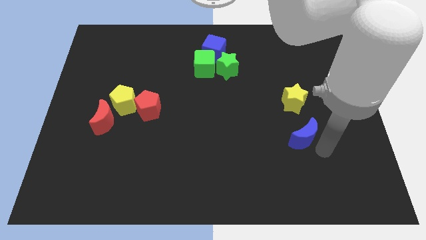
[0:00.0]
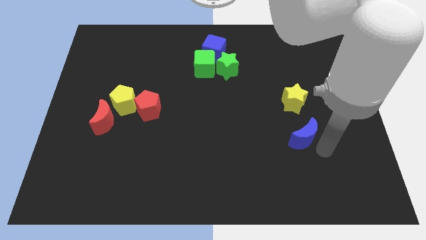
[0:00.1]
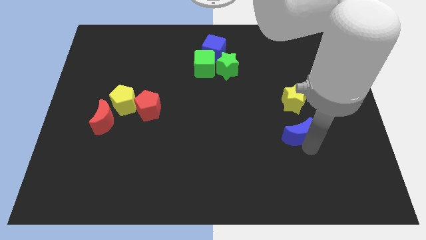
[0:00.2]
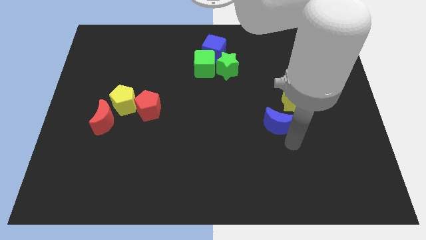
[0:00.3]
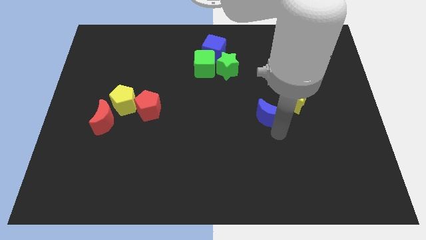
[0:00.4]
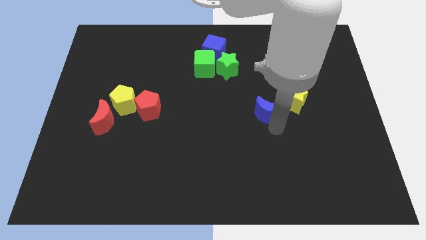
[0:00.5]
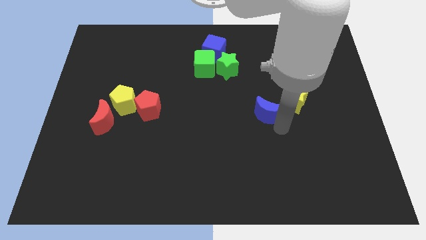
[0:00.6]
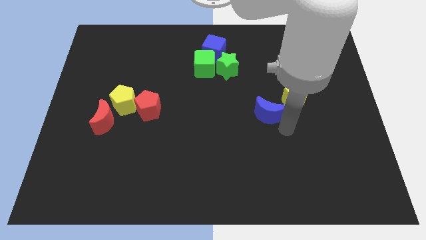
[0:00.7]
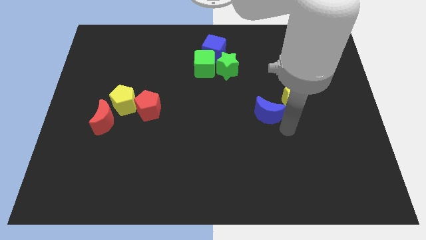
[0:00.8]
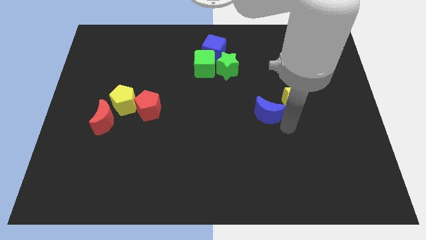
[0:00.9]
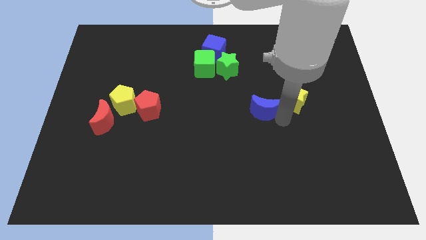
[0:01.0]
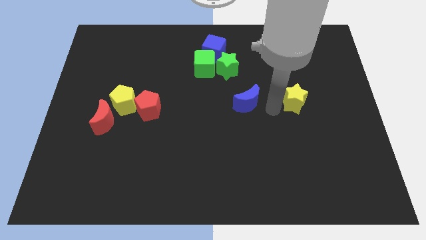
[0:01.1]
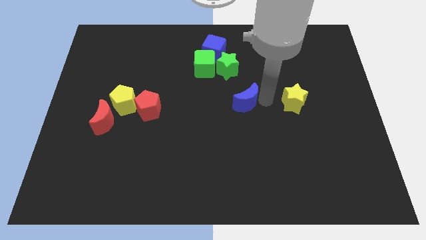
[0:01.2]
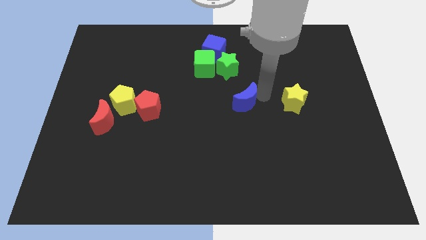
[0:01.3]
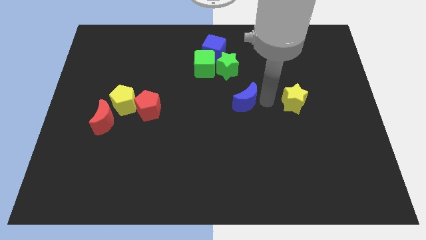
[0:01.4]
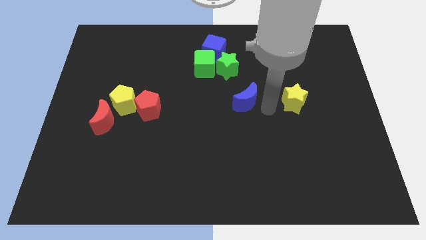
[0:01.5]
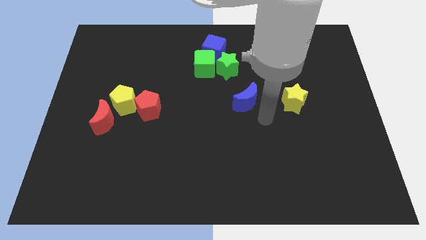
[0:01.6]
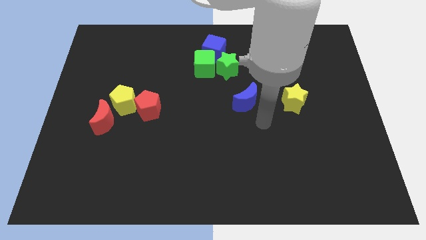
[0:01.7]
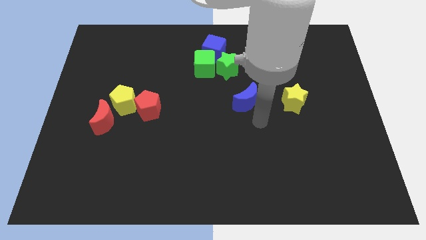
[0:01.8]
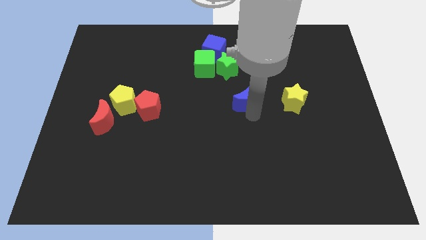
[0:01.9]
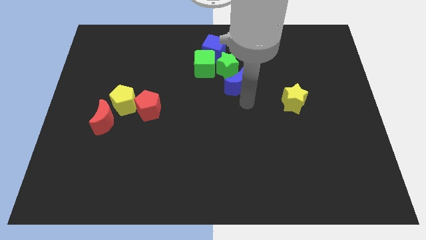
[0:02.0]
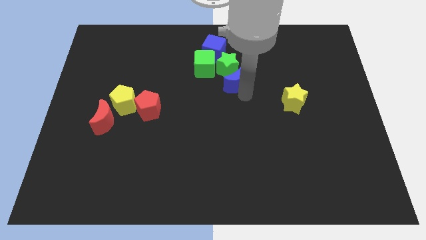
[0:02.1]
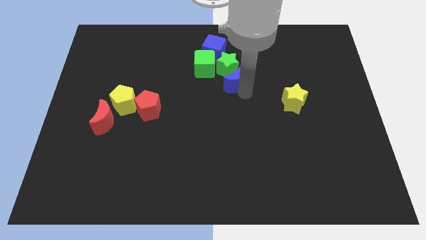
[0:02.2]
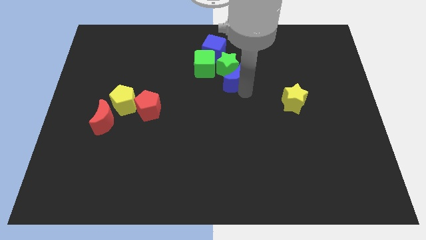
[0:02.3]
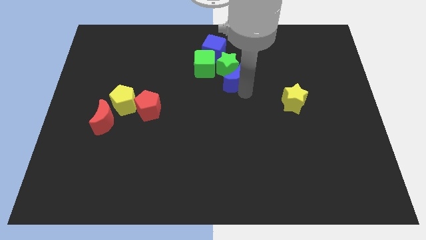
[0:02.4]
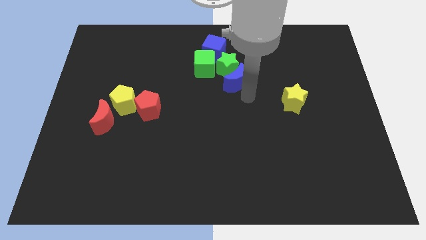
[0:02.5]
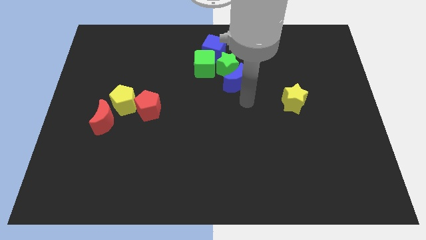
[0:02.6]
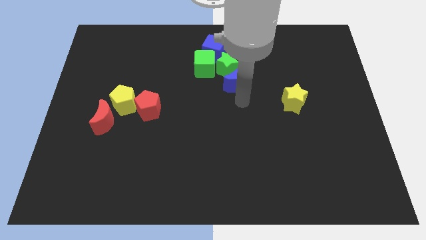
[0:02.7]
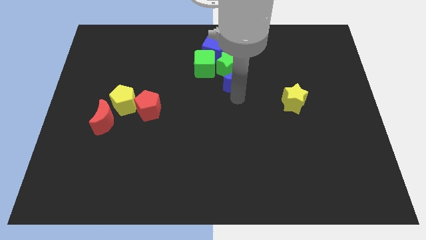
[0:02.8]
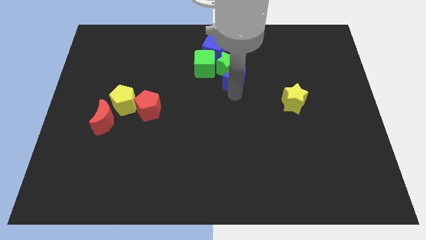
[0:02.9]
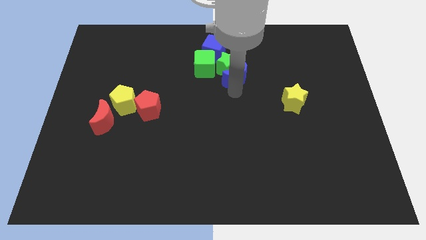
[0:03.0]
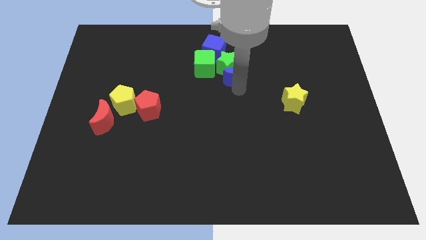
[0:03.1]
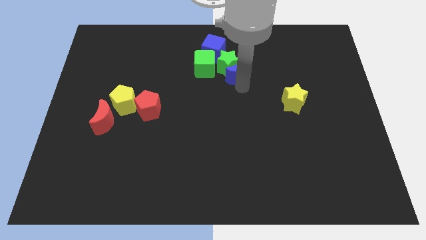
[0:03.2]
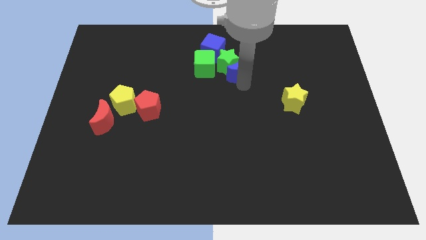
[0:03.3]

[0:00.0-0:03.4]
push the blue crescent into the green star

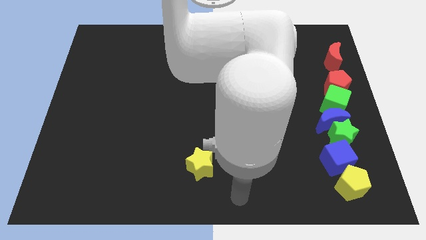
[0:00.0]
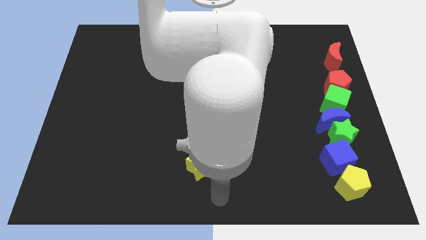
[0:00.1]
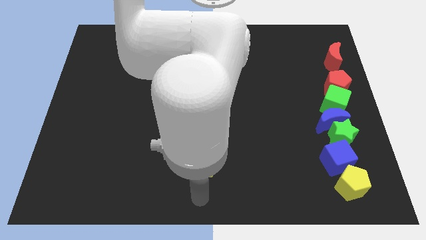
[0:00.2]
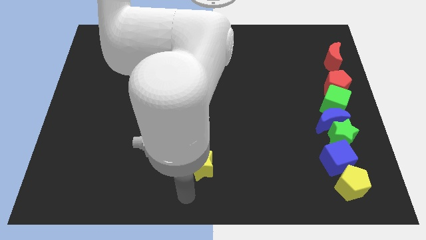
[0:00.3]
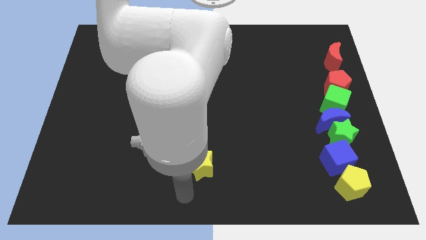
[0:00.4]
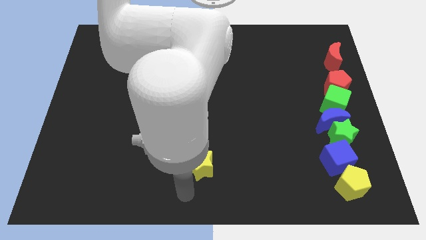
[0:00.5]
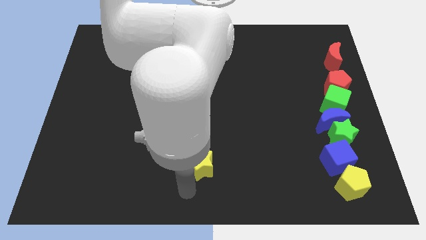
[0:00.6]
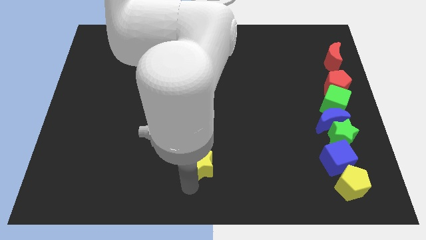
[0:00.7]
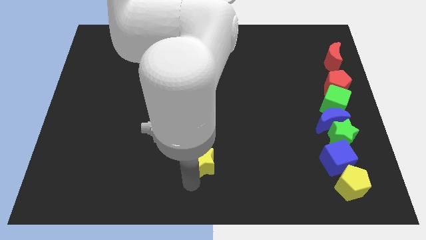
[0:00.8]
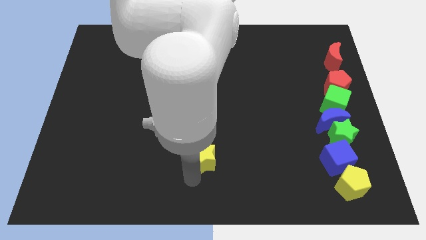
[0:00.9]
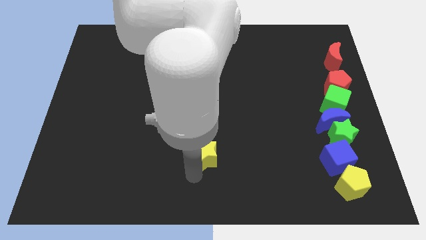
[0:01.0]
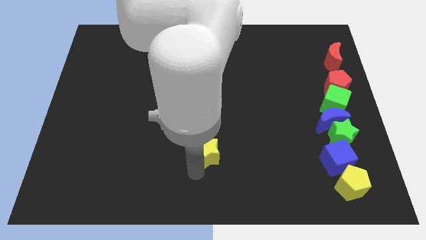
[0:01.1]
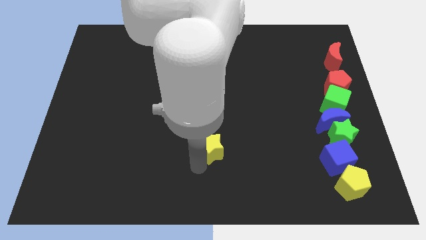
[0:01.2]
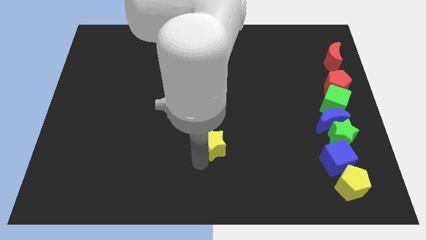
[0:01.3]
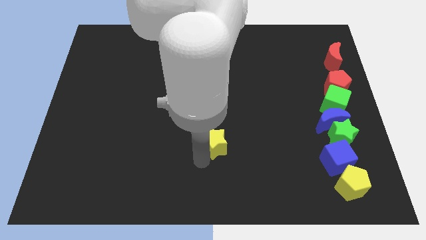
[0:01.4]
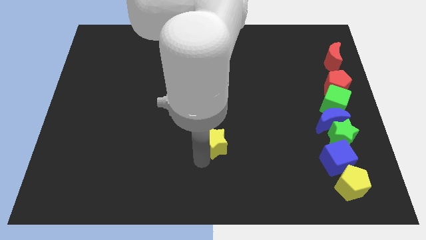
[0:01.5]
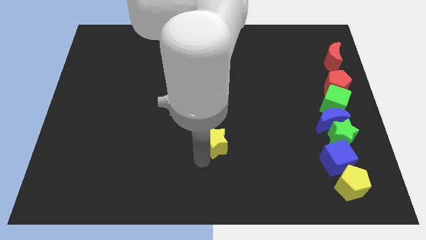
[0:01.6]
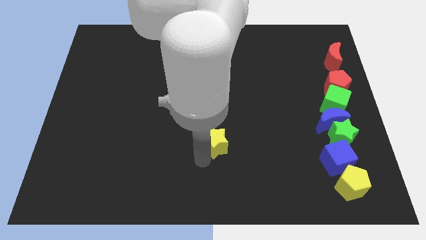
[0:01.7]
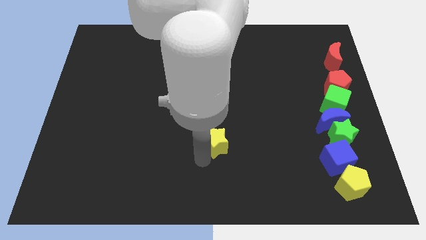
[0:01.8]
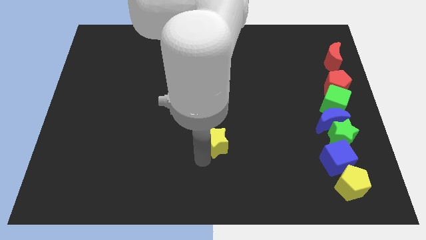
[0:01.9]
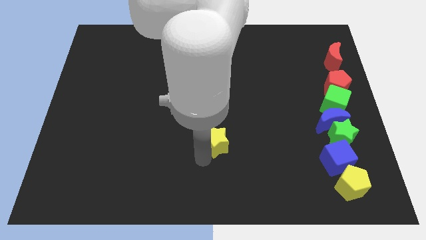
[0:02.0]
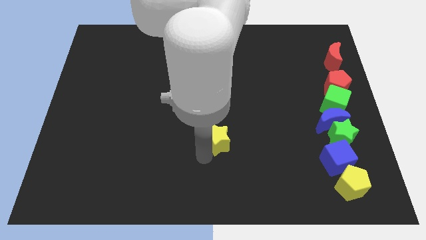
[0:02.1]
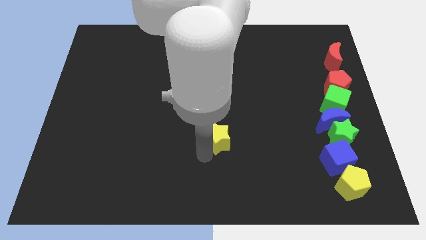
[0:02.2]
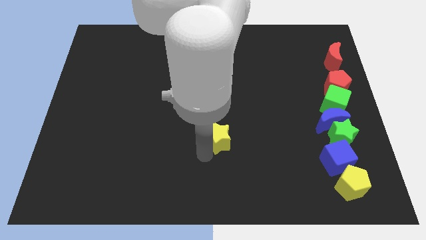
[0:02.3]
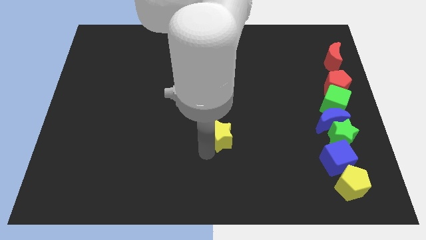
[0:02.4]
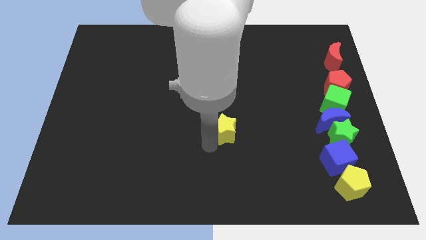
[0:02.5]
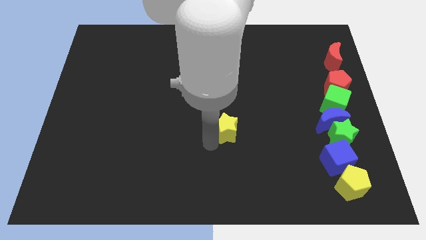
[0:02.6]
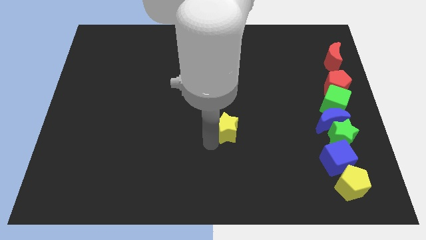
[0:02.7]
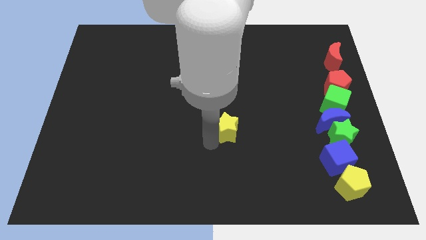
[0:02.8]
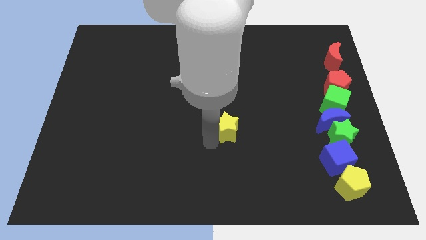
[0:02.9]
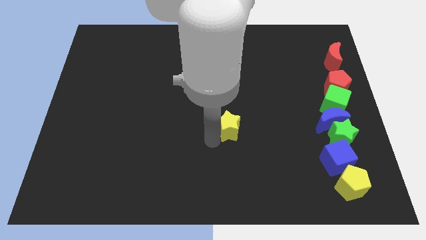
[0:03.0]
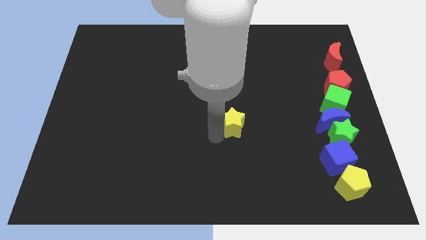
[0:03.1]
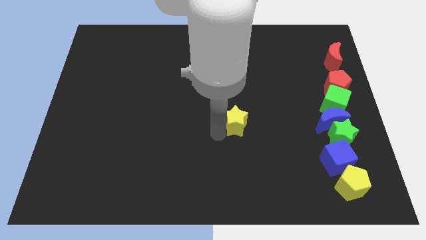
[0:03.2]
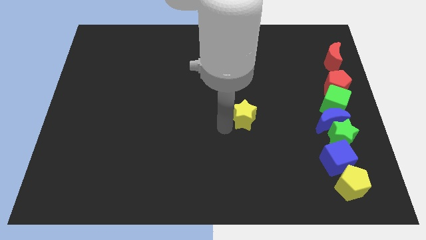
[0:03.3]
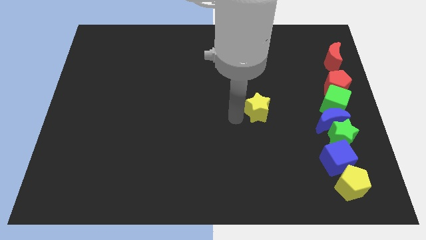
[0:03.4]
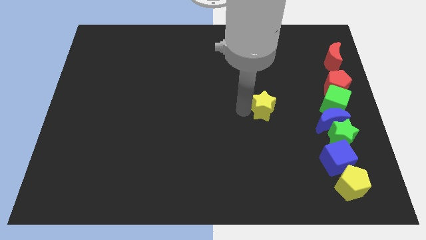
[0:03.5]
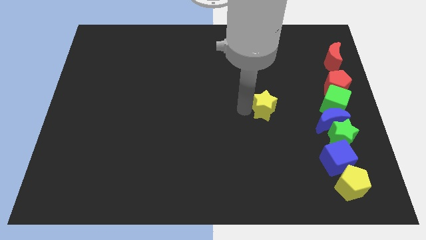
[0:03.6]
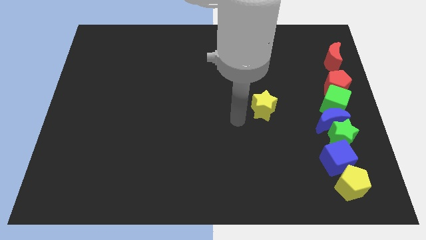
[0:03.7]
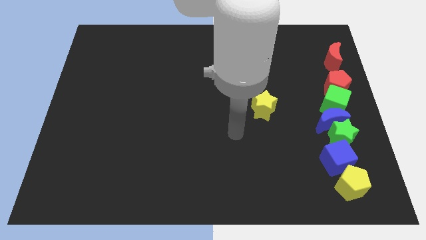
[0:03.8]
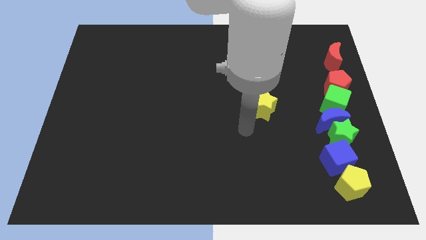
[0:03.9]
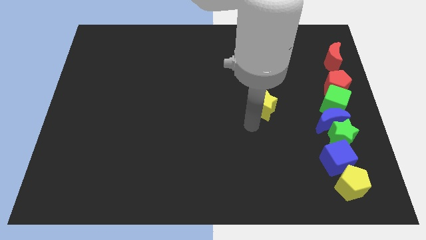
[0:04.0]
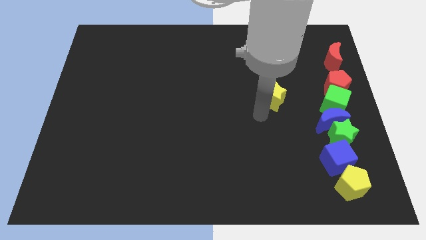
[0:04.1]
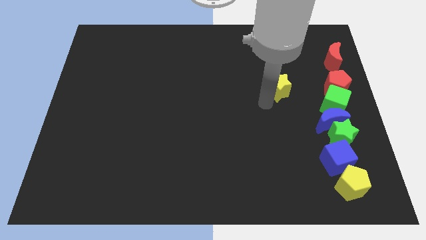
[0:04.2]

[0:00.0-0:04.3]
move the yellow star horizontally to the left side of the green cube

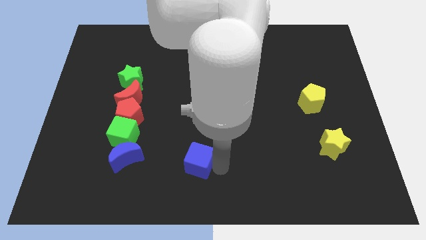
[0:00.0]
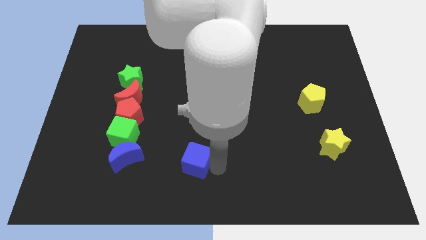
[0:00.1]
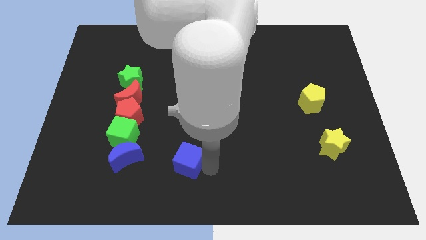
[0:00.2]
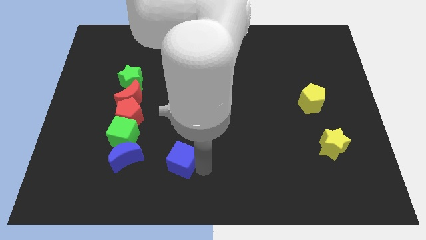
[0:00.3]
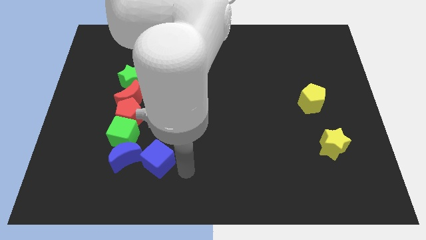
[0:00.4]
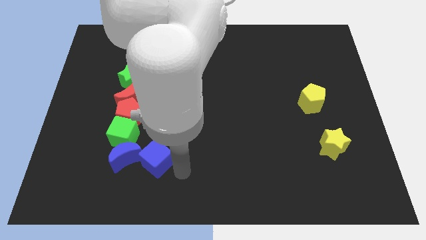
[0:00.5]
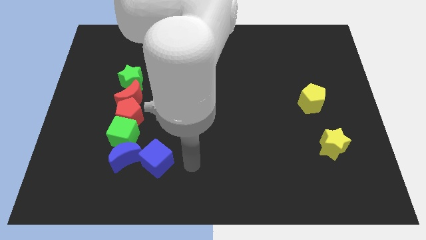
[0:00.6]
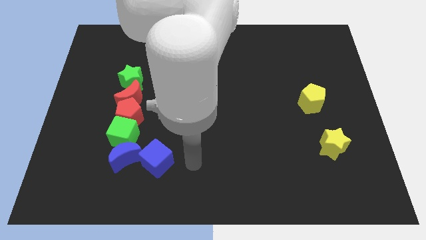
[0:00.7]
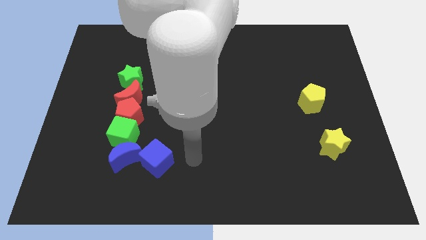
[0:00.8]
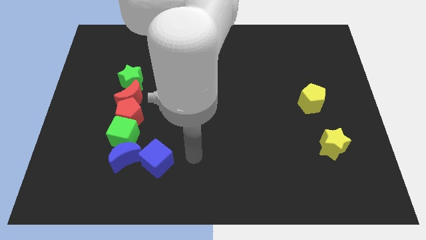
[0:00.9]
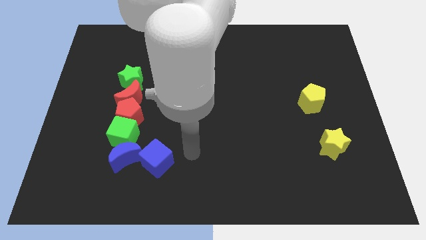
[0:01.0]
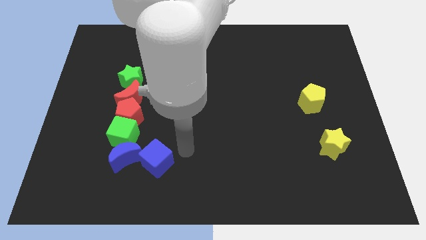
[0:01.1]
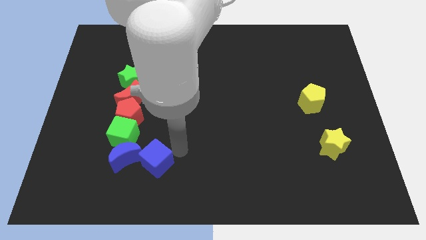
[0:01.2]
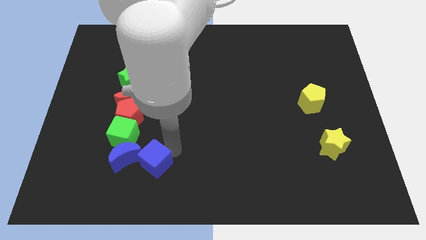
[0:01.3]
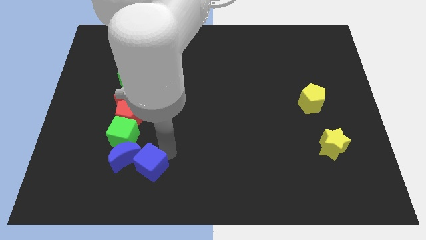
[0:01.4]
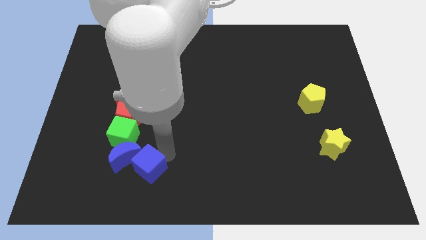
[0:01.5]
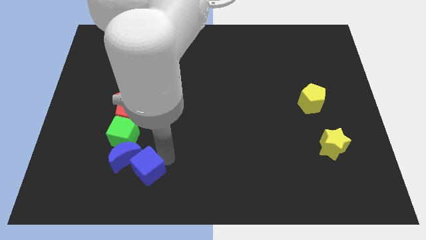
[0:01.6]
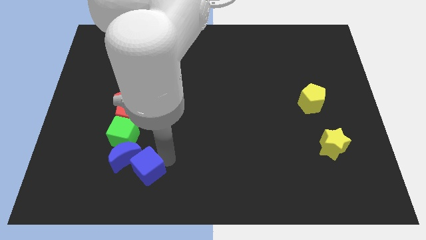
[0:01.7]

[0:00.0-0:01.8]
push the blue cube close to the blue crescent
